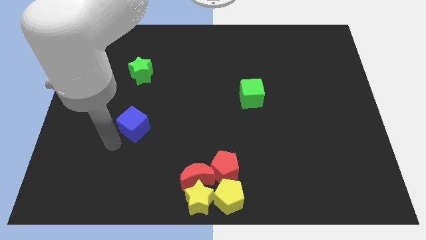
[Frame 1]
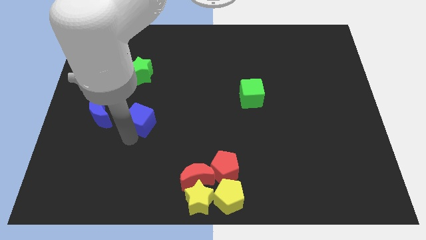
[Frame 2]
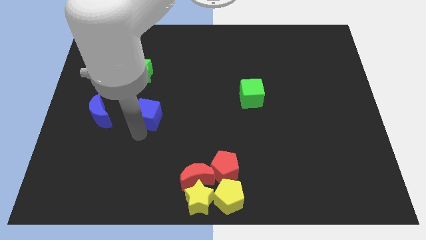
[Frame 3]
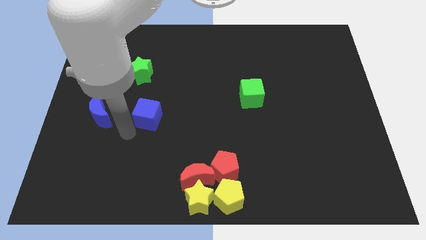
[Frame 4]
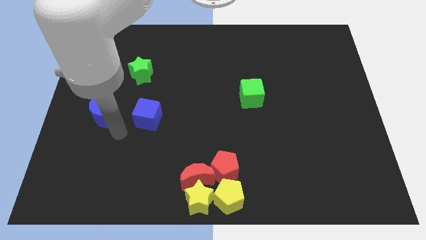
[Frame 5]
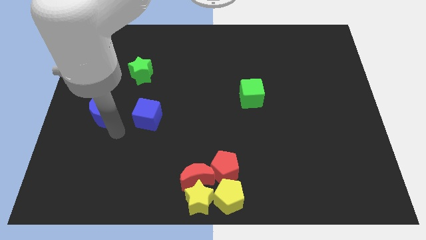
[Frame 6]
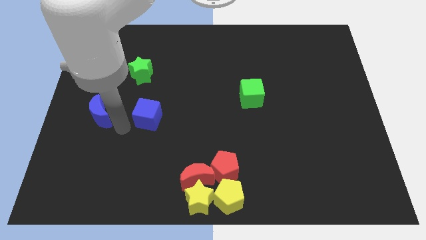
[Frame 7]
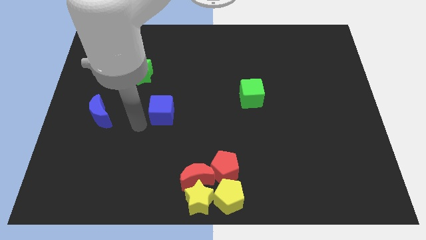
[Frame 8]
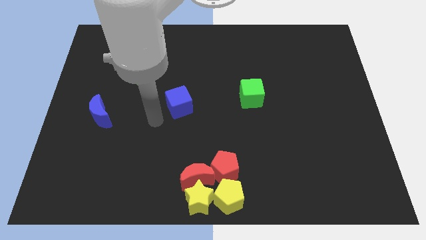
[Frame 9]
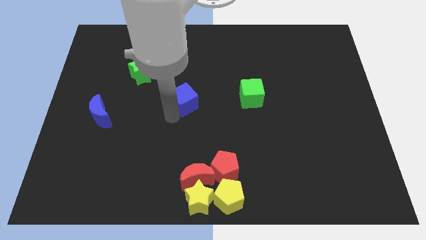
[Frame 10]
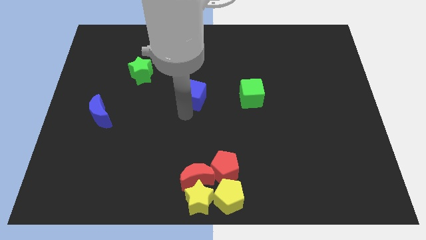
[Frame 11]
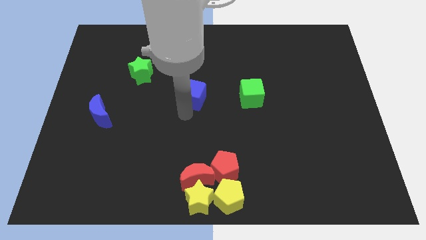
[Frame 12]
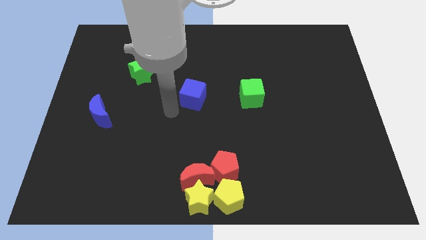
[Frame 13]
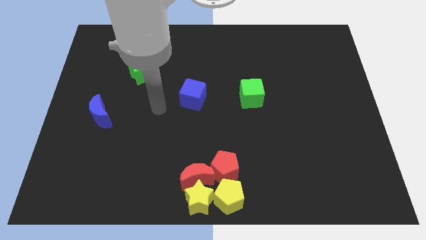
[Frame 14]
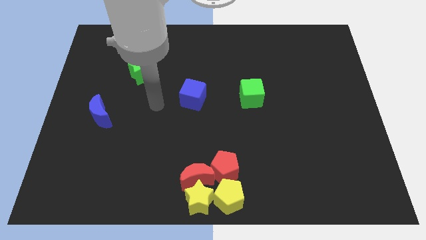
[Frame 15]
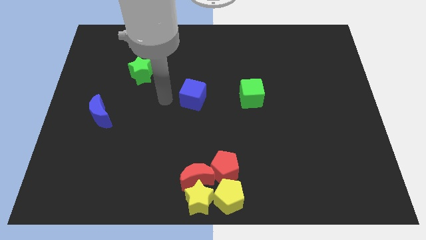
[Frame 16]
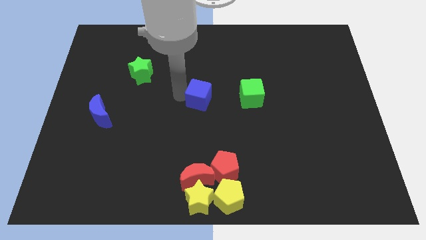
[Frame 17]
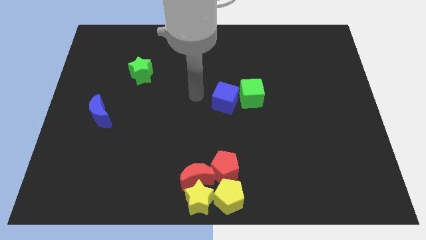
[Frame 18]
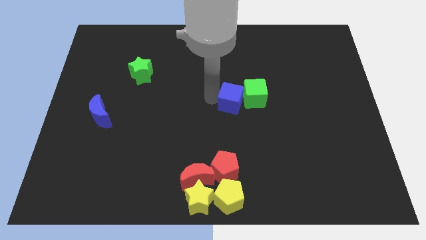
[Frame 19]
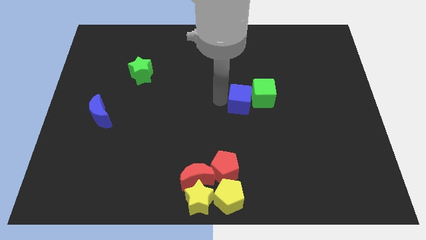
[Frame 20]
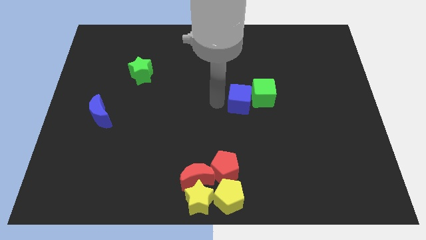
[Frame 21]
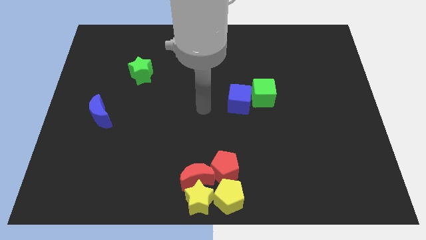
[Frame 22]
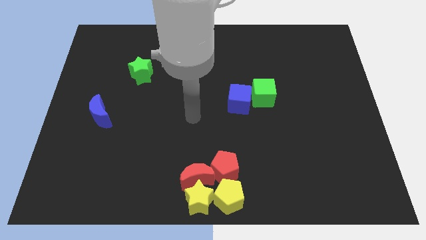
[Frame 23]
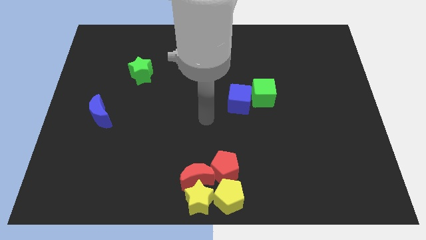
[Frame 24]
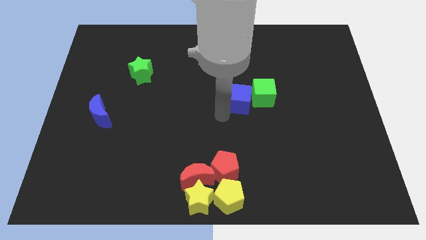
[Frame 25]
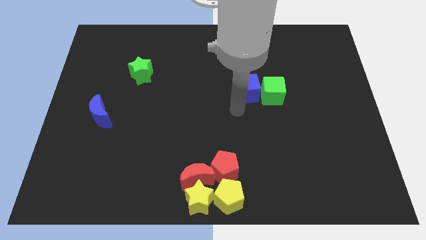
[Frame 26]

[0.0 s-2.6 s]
push the blue cube into green cube

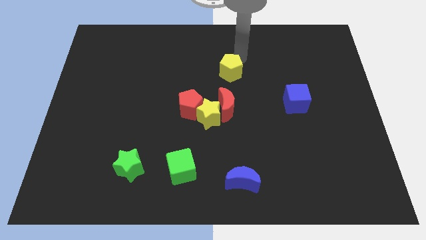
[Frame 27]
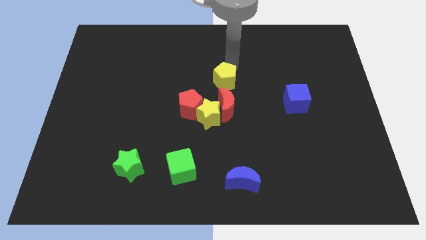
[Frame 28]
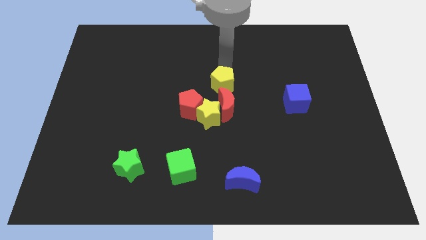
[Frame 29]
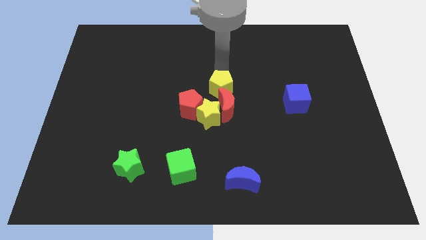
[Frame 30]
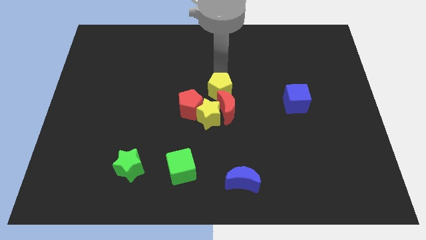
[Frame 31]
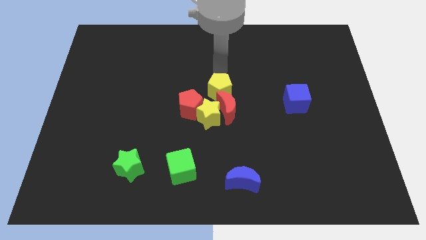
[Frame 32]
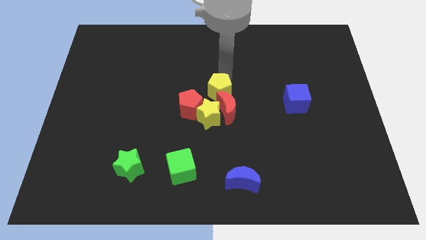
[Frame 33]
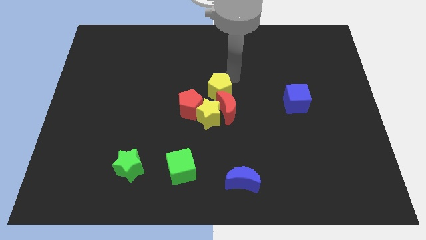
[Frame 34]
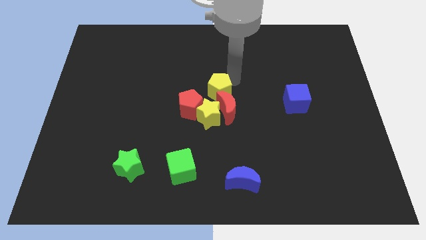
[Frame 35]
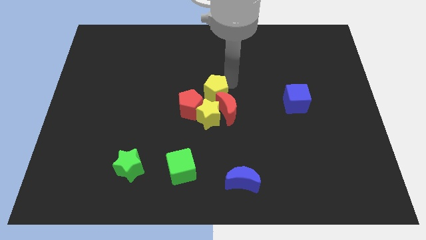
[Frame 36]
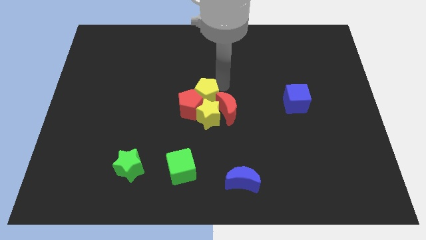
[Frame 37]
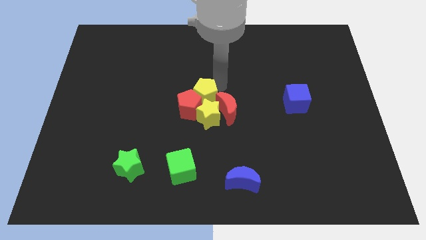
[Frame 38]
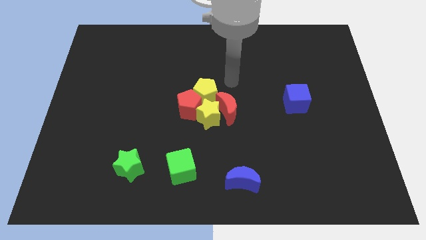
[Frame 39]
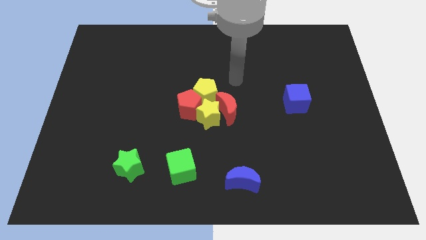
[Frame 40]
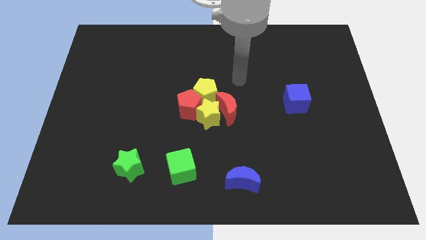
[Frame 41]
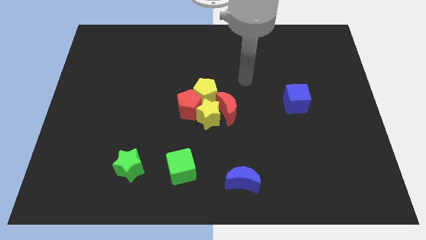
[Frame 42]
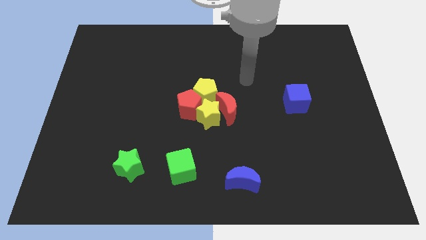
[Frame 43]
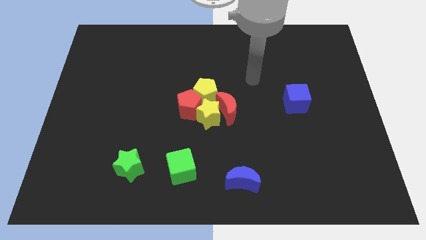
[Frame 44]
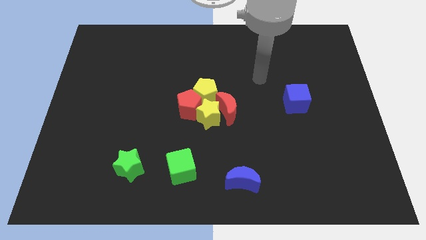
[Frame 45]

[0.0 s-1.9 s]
move yellow pentagon diagonally above the red pentagon

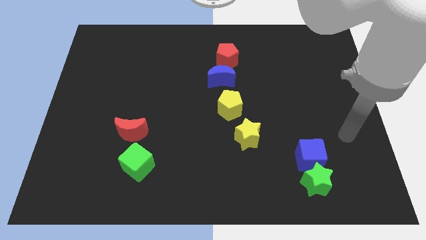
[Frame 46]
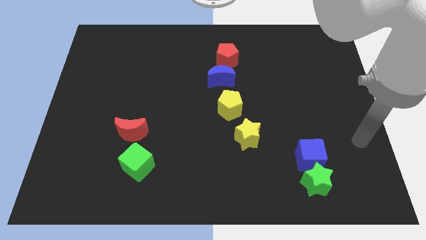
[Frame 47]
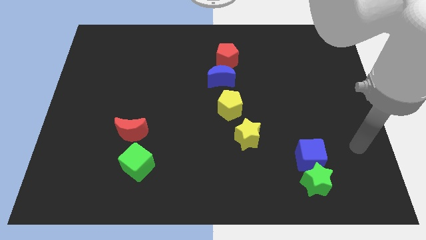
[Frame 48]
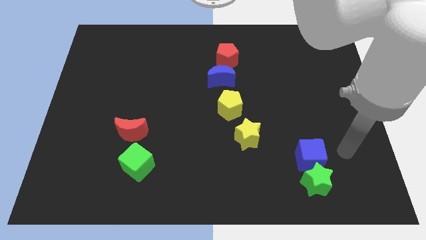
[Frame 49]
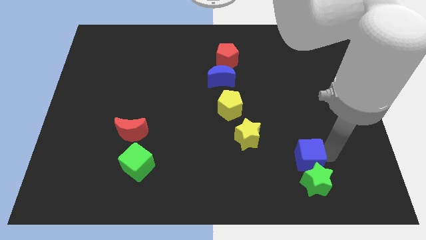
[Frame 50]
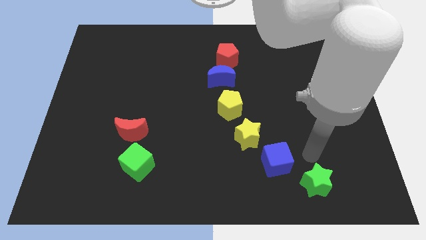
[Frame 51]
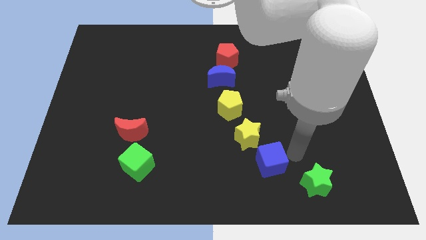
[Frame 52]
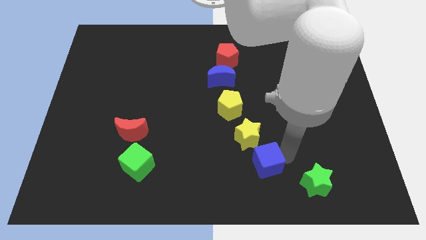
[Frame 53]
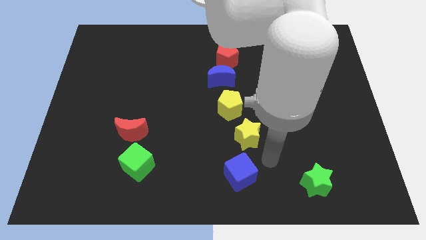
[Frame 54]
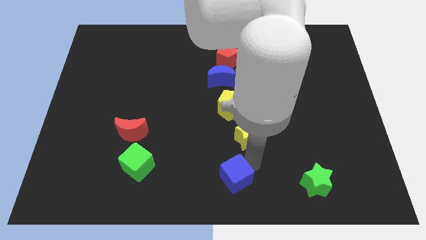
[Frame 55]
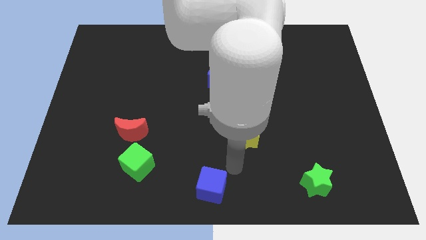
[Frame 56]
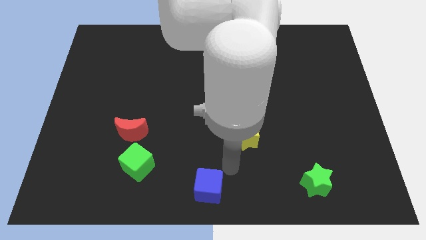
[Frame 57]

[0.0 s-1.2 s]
move the blue cube towards the bottom center of the board

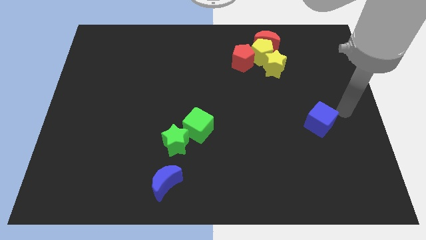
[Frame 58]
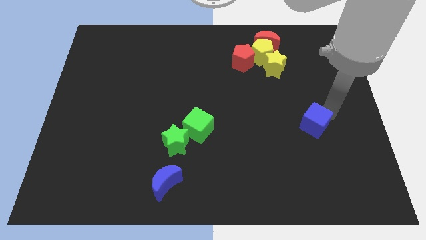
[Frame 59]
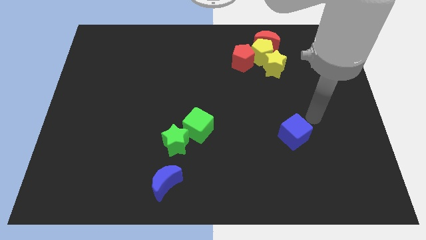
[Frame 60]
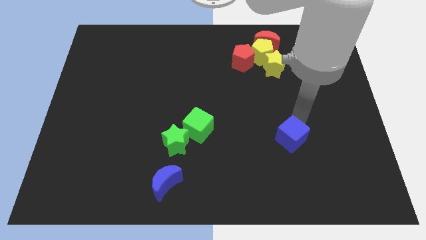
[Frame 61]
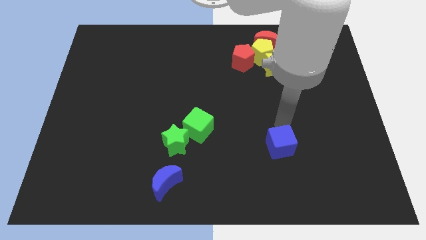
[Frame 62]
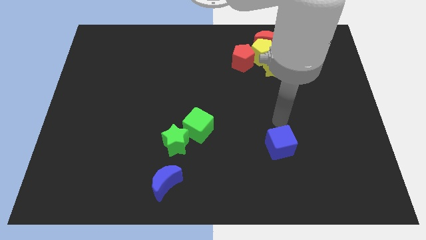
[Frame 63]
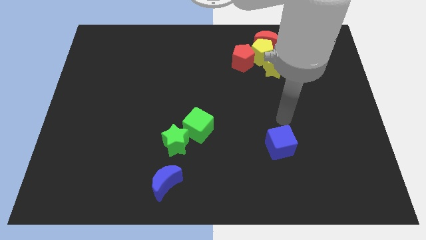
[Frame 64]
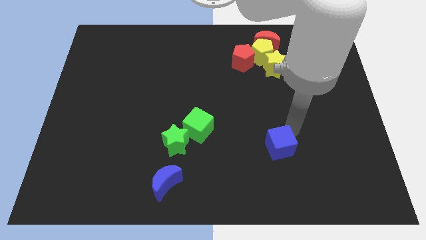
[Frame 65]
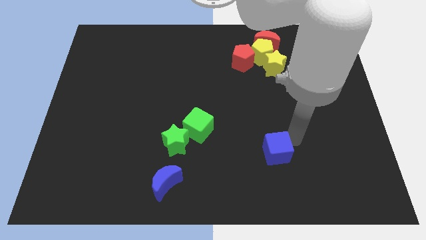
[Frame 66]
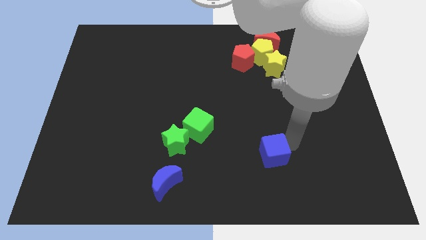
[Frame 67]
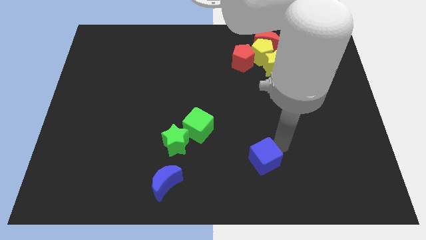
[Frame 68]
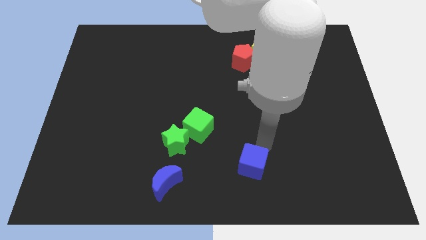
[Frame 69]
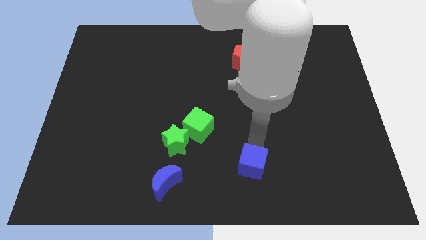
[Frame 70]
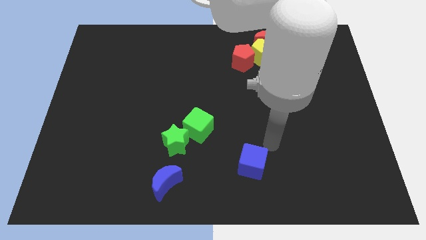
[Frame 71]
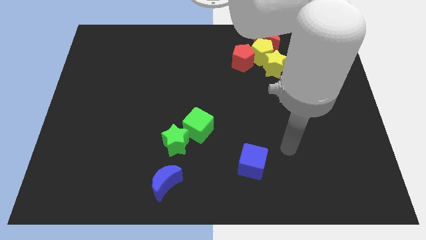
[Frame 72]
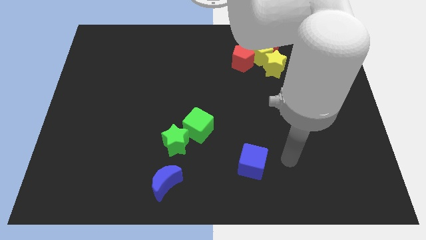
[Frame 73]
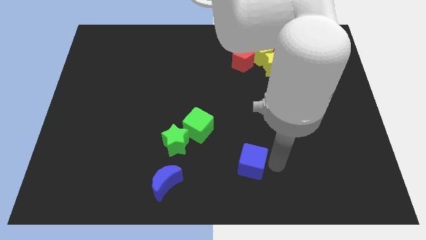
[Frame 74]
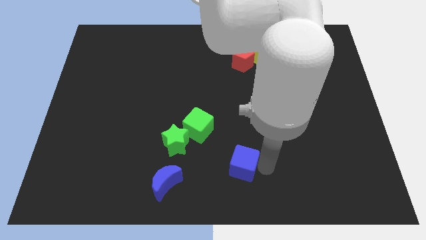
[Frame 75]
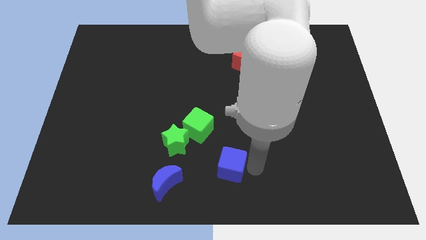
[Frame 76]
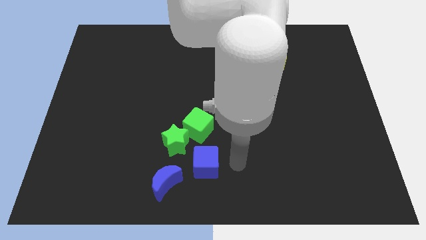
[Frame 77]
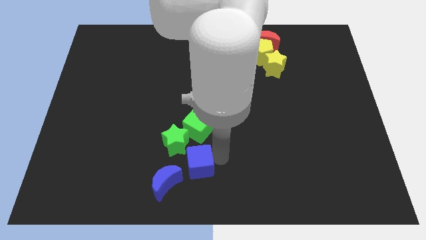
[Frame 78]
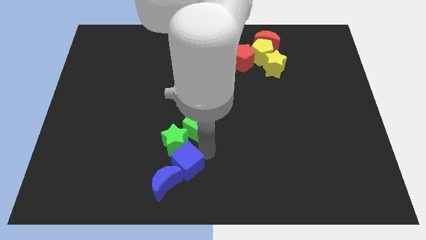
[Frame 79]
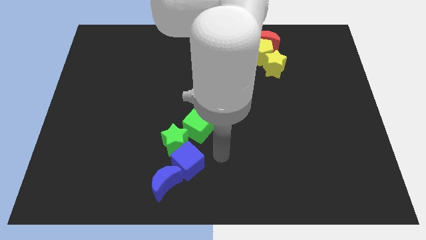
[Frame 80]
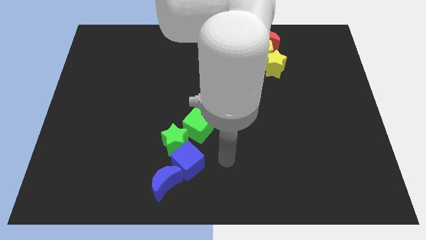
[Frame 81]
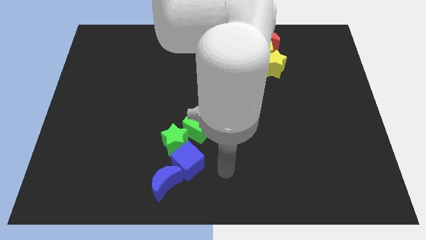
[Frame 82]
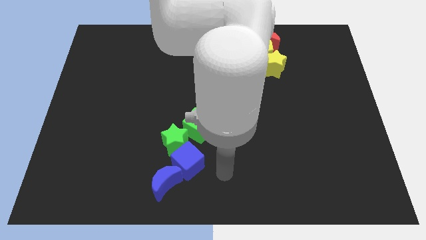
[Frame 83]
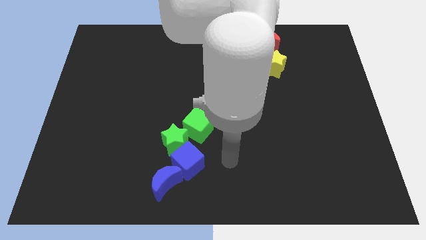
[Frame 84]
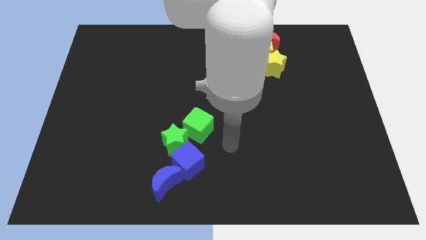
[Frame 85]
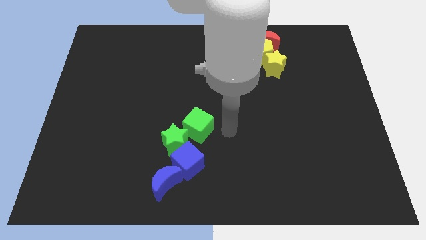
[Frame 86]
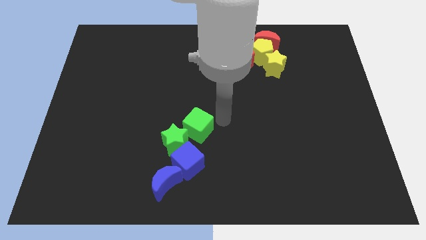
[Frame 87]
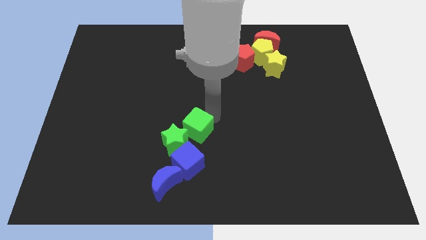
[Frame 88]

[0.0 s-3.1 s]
place blue cube below the green star

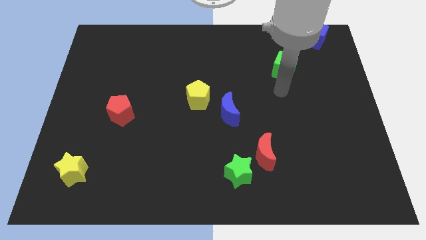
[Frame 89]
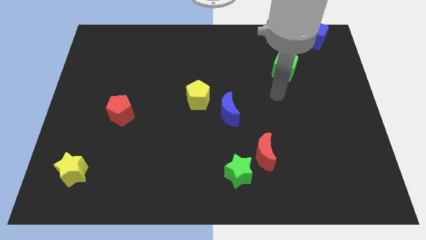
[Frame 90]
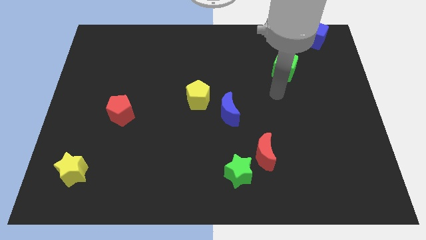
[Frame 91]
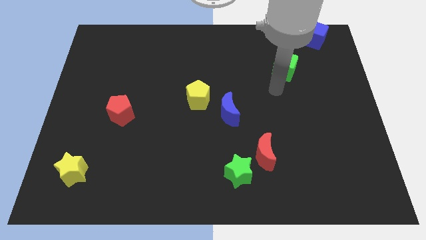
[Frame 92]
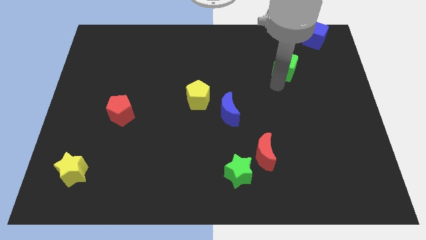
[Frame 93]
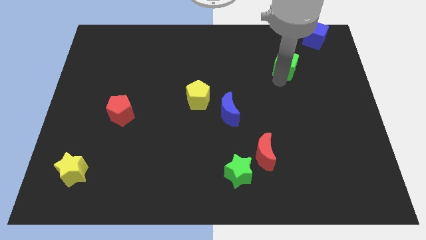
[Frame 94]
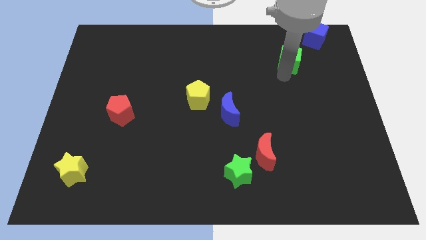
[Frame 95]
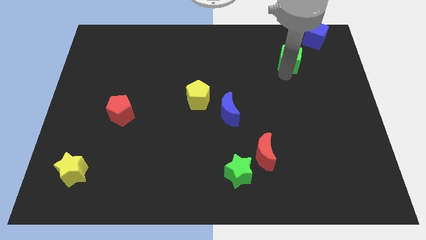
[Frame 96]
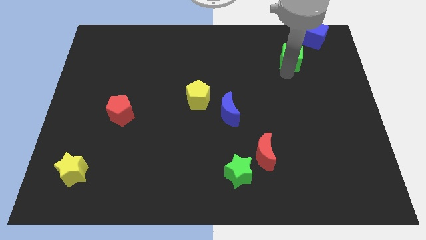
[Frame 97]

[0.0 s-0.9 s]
push green cube towards blue cube
